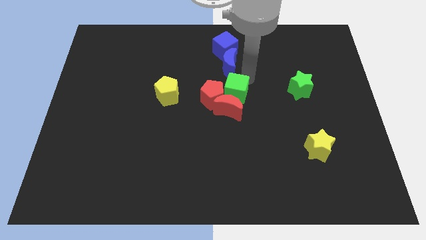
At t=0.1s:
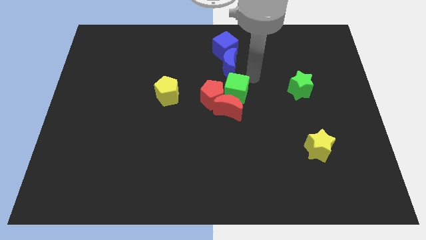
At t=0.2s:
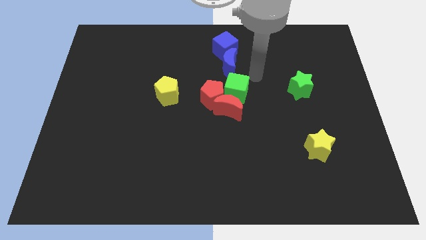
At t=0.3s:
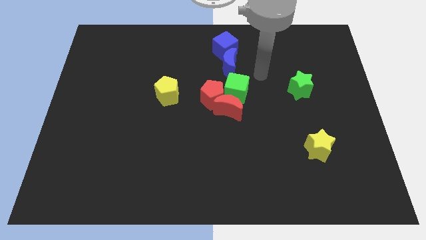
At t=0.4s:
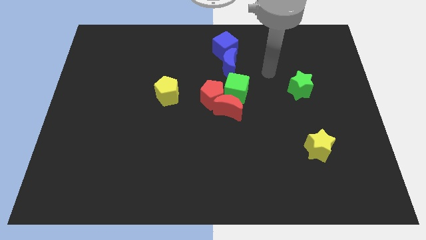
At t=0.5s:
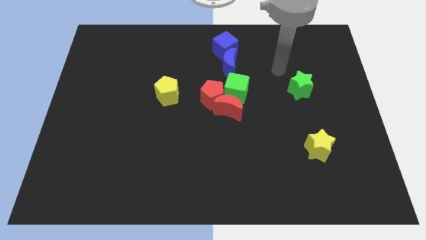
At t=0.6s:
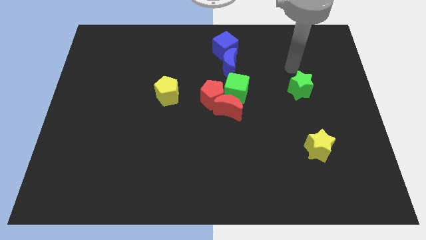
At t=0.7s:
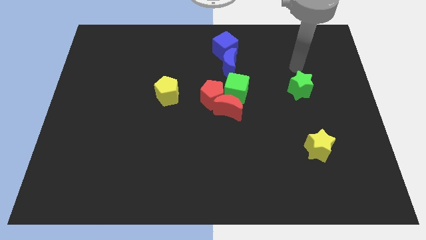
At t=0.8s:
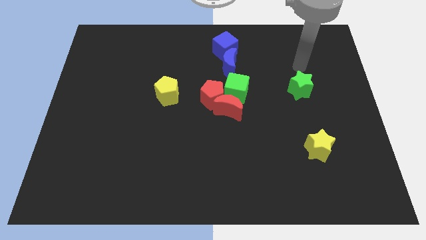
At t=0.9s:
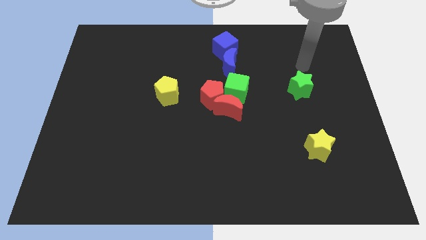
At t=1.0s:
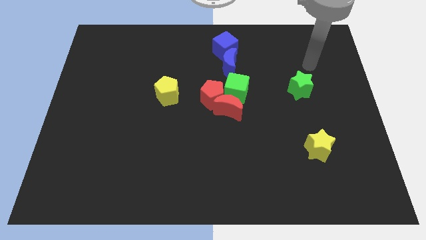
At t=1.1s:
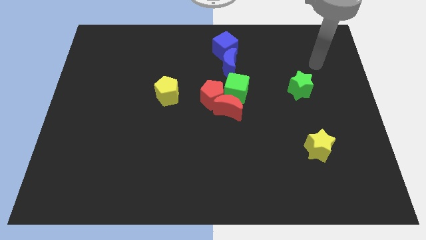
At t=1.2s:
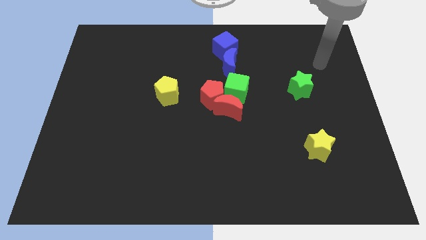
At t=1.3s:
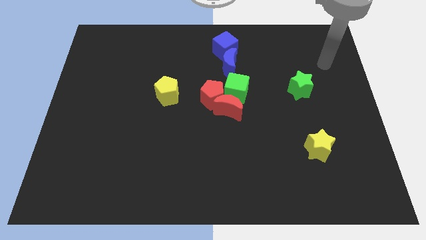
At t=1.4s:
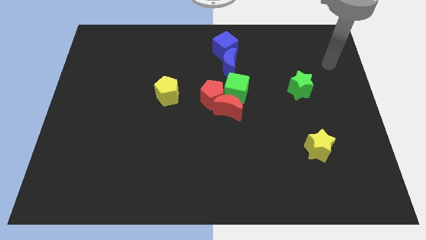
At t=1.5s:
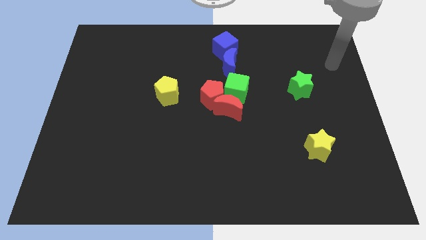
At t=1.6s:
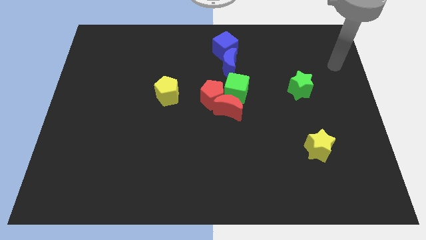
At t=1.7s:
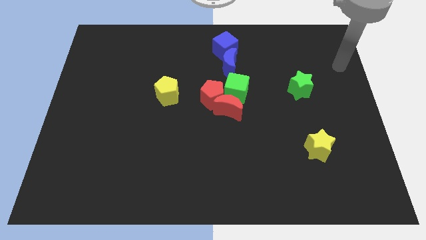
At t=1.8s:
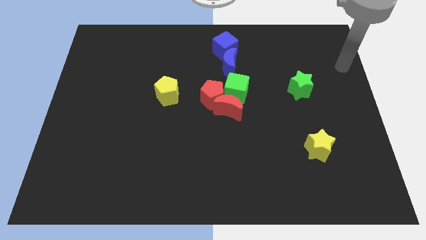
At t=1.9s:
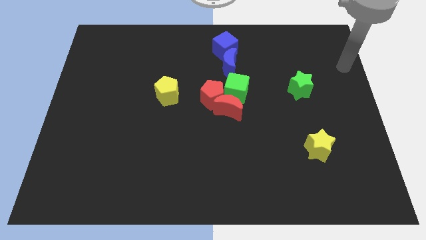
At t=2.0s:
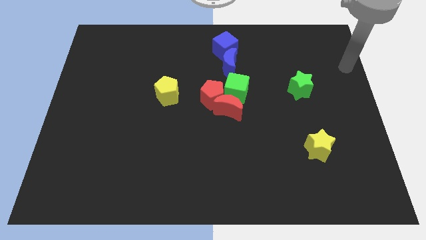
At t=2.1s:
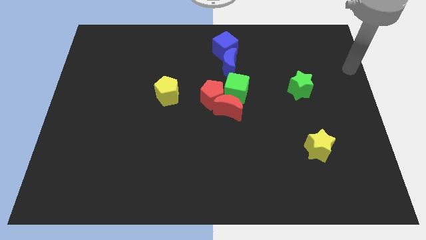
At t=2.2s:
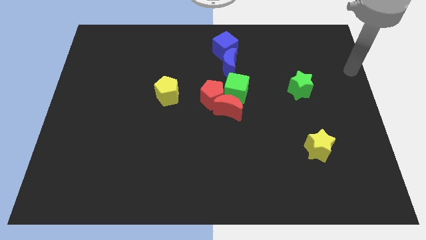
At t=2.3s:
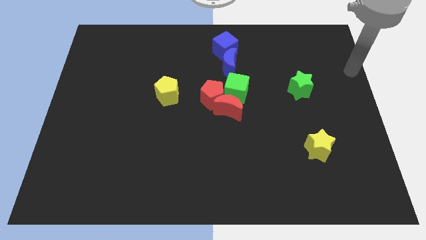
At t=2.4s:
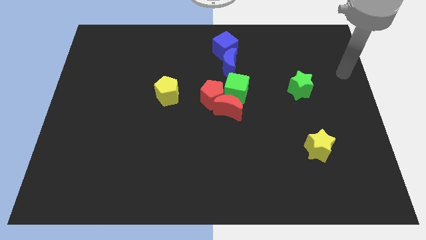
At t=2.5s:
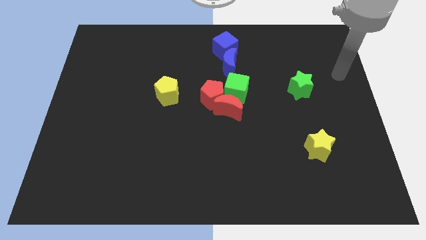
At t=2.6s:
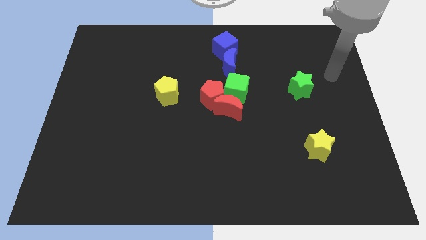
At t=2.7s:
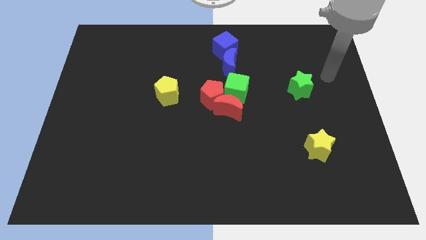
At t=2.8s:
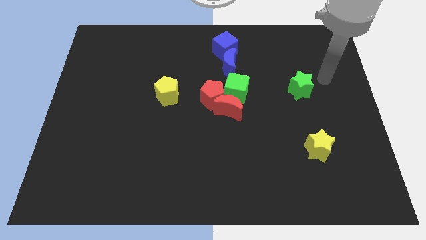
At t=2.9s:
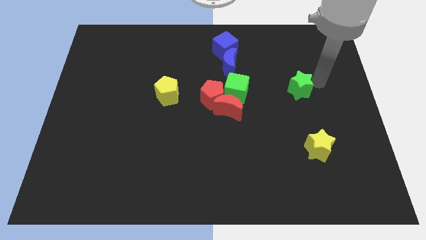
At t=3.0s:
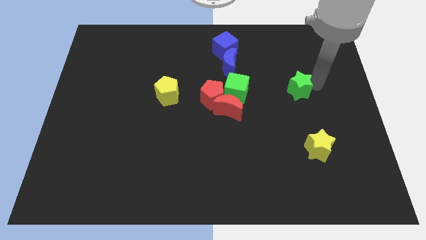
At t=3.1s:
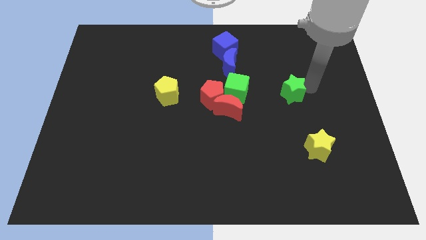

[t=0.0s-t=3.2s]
tap the right side of the green star

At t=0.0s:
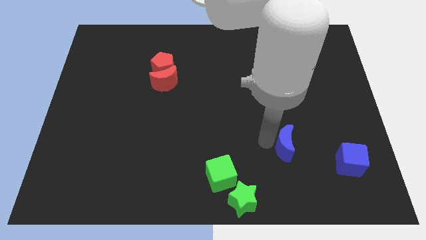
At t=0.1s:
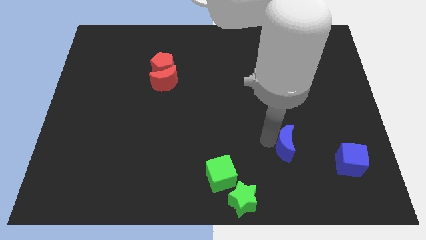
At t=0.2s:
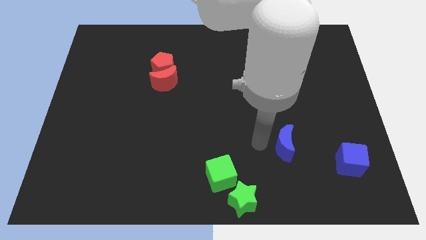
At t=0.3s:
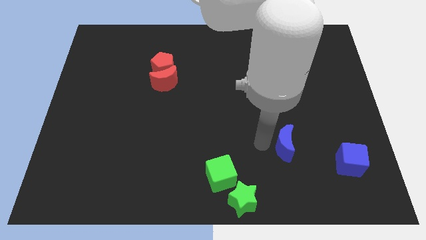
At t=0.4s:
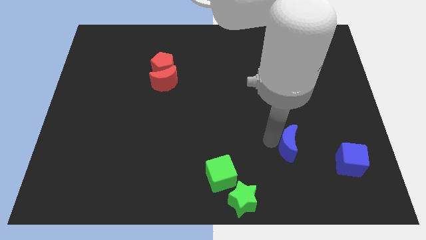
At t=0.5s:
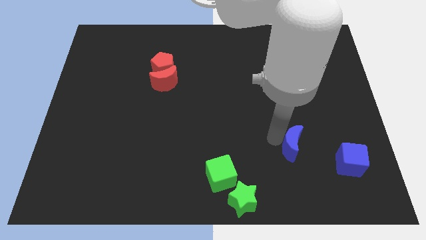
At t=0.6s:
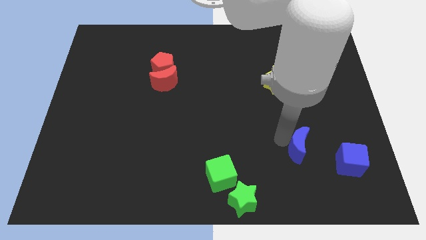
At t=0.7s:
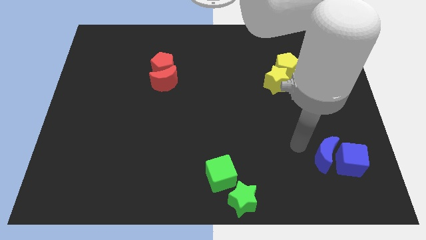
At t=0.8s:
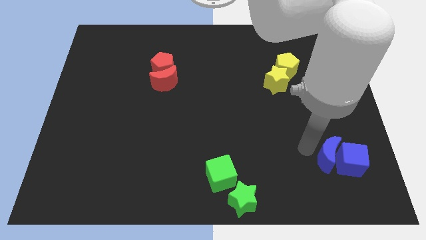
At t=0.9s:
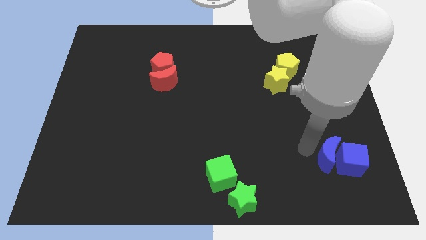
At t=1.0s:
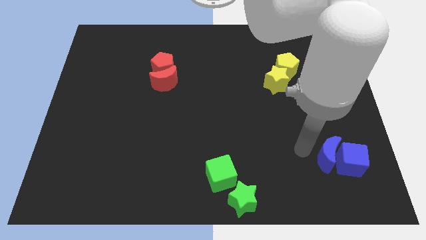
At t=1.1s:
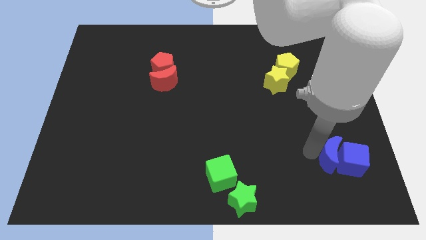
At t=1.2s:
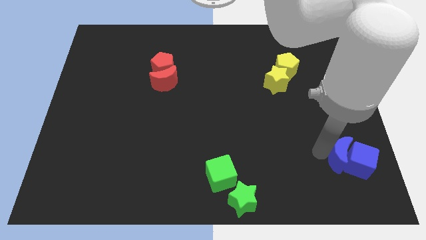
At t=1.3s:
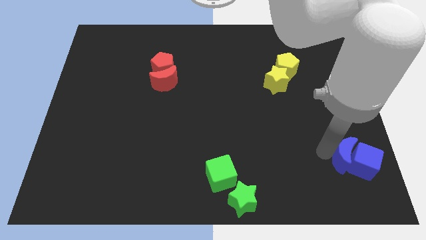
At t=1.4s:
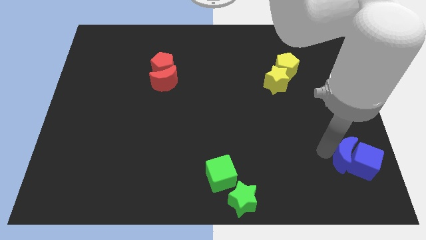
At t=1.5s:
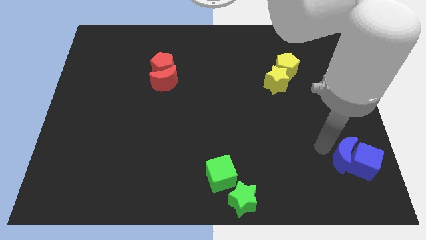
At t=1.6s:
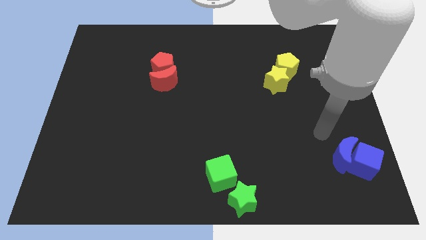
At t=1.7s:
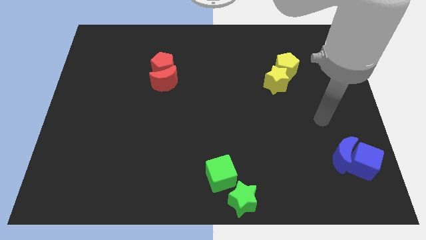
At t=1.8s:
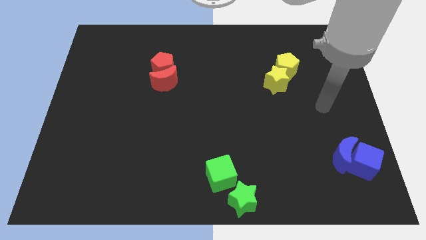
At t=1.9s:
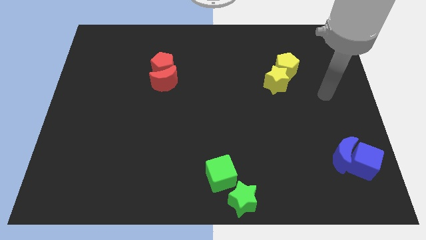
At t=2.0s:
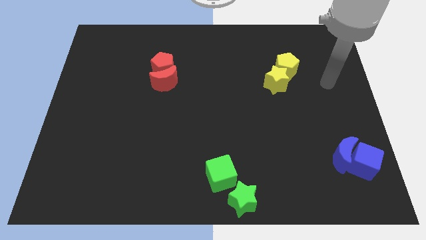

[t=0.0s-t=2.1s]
push the blue crescent to the left of the blue cube

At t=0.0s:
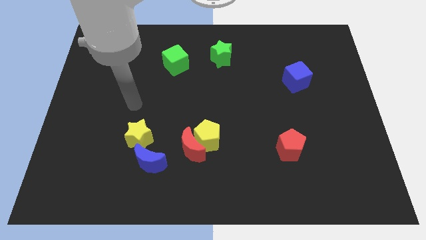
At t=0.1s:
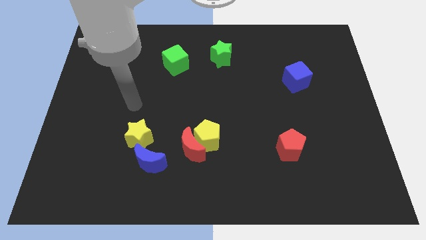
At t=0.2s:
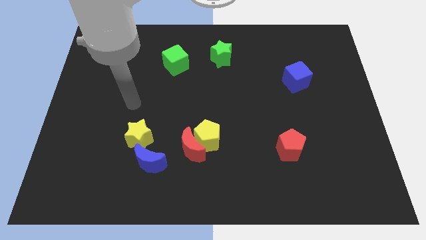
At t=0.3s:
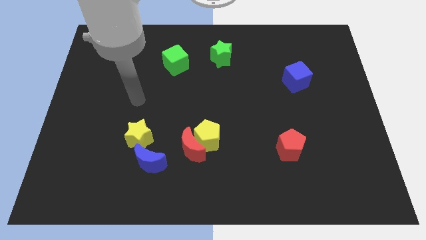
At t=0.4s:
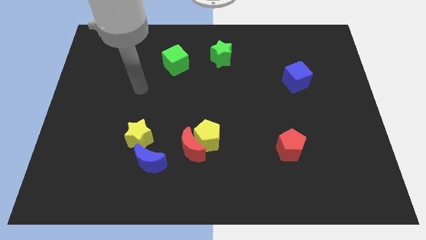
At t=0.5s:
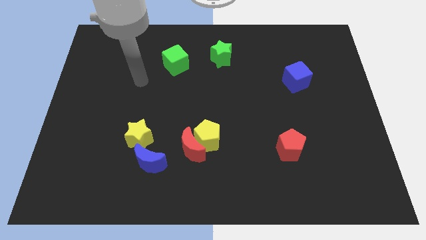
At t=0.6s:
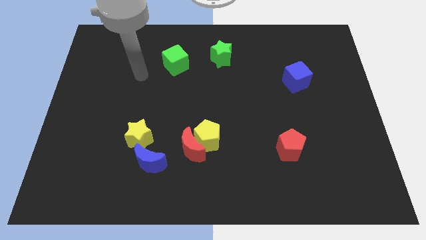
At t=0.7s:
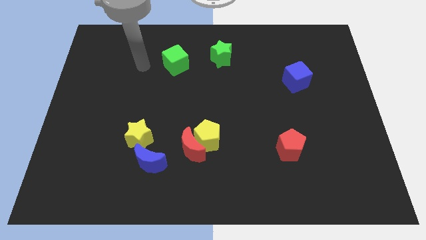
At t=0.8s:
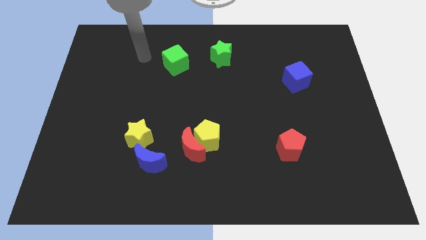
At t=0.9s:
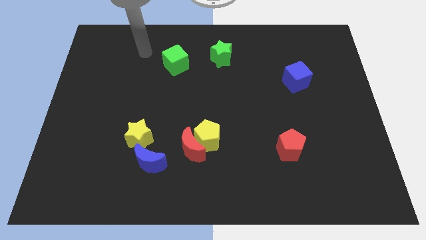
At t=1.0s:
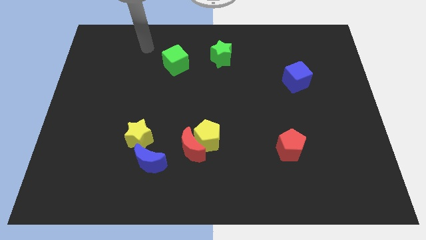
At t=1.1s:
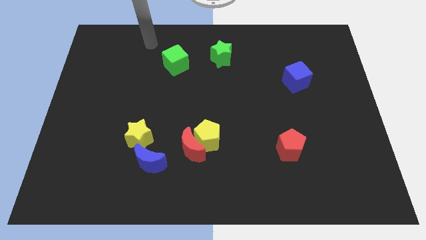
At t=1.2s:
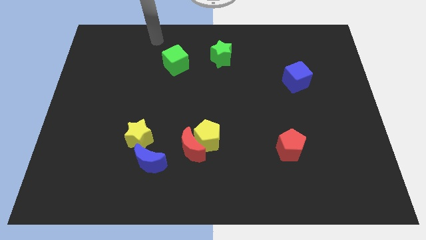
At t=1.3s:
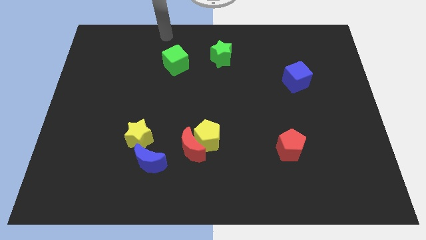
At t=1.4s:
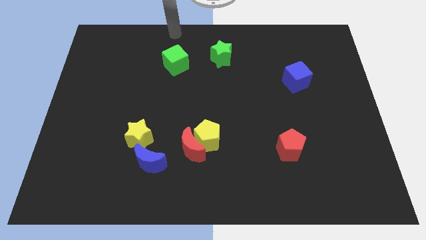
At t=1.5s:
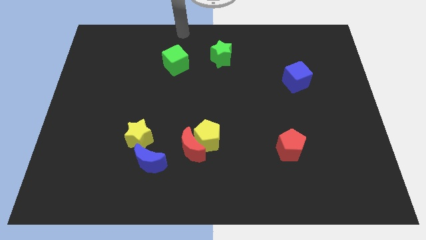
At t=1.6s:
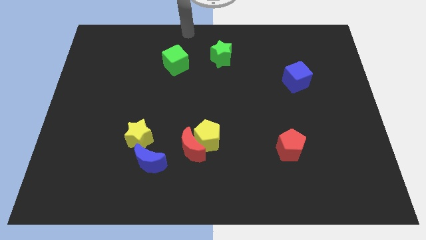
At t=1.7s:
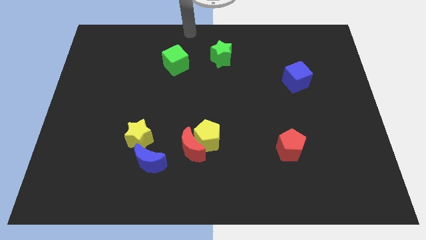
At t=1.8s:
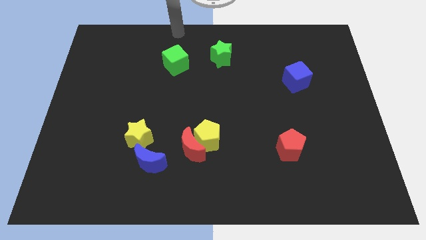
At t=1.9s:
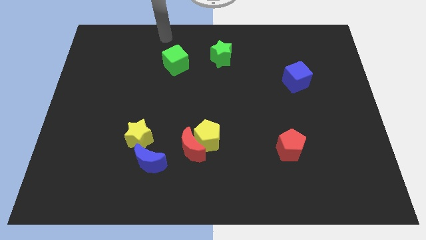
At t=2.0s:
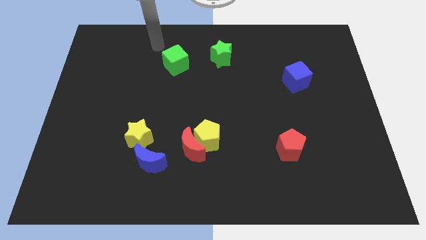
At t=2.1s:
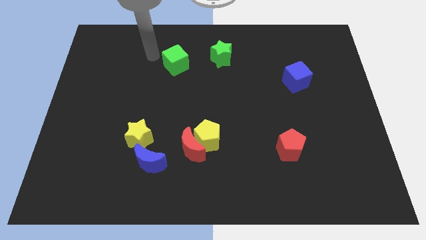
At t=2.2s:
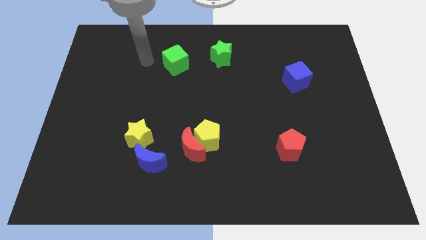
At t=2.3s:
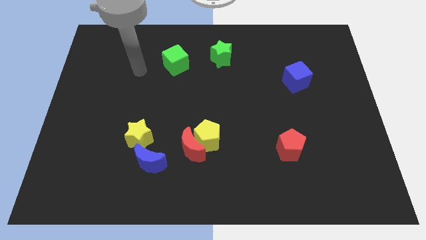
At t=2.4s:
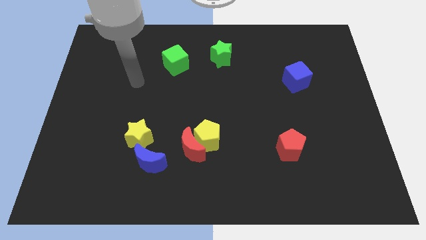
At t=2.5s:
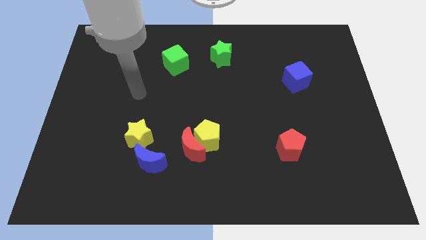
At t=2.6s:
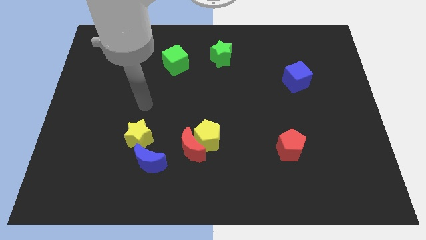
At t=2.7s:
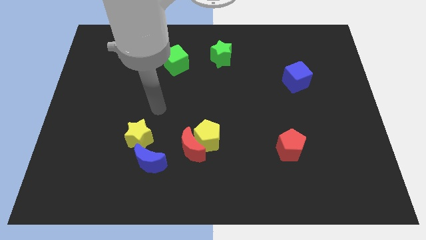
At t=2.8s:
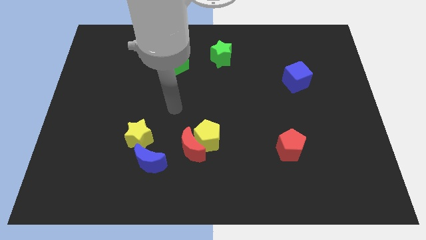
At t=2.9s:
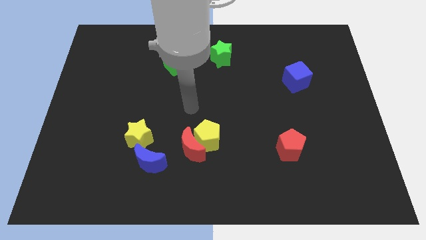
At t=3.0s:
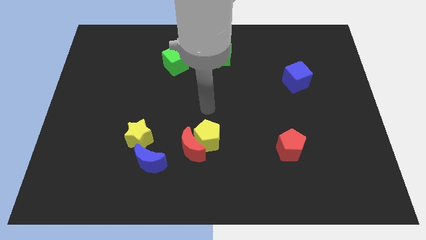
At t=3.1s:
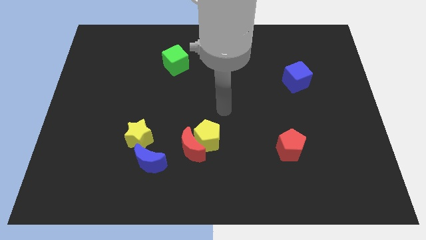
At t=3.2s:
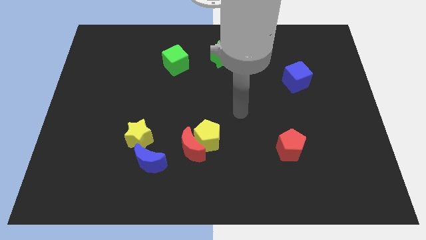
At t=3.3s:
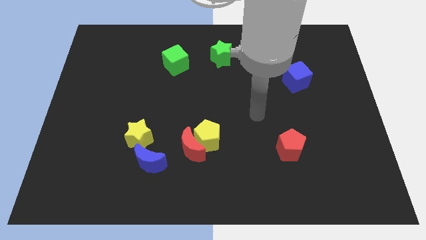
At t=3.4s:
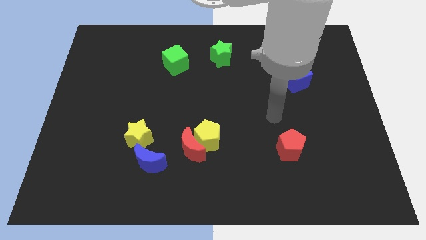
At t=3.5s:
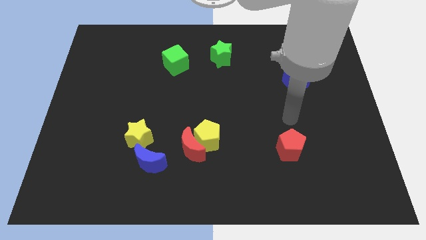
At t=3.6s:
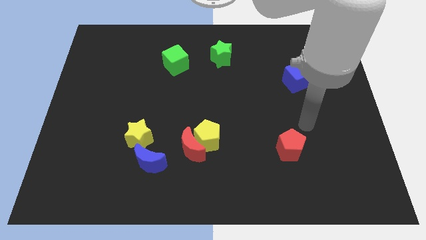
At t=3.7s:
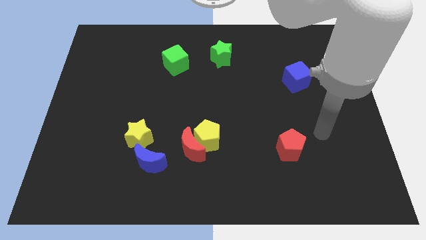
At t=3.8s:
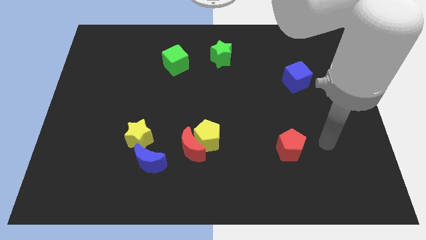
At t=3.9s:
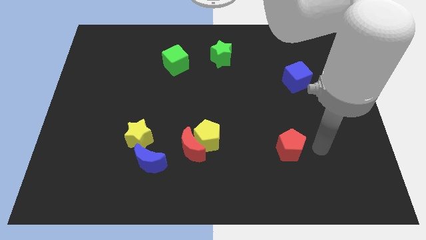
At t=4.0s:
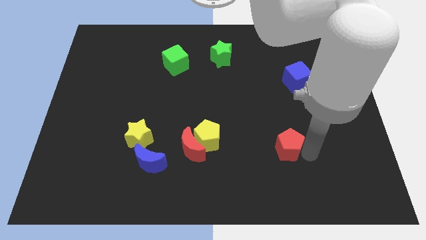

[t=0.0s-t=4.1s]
place your arm to the right of red pentagon
